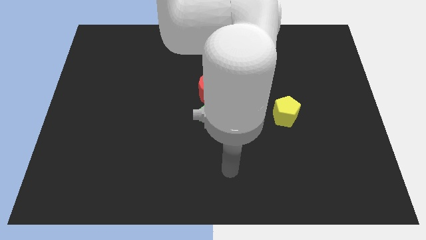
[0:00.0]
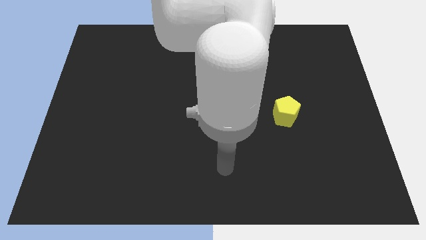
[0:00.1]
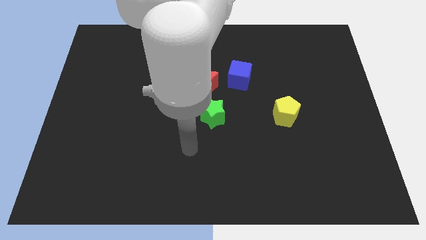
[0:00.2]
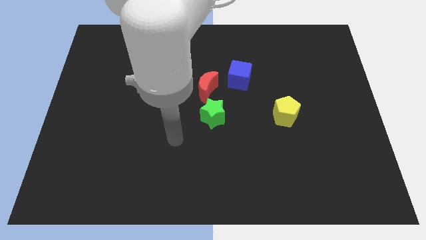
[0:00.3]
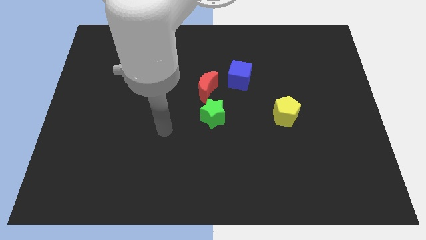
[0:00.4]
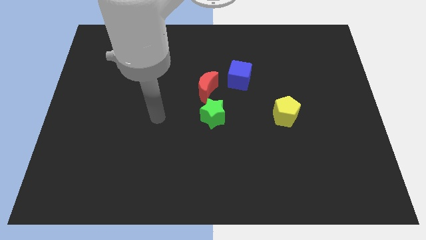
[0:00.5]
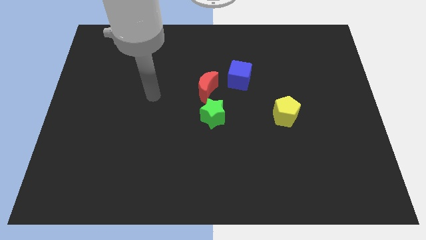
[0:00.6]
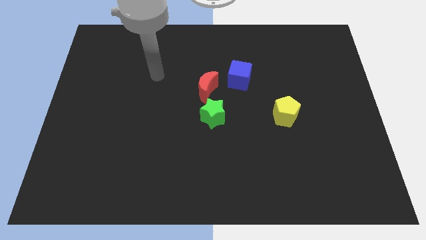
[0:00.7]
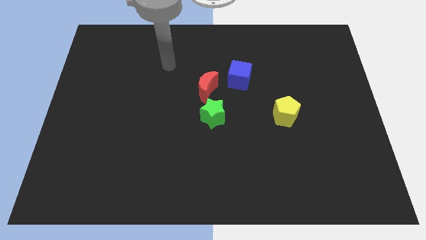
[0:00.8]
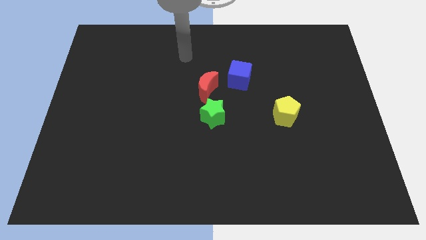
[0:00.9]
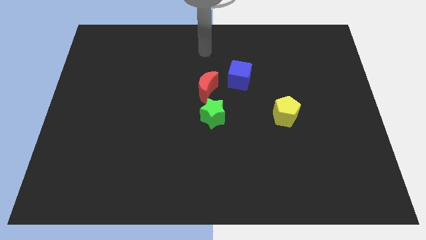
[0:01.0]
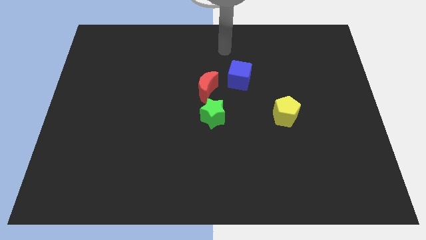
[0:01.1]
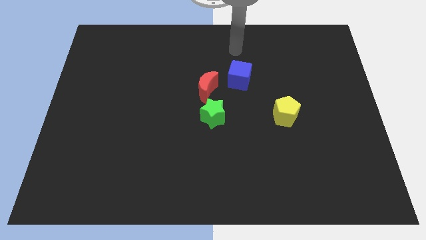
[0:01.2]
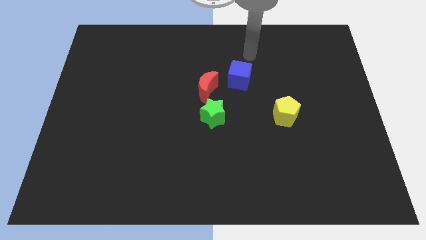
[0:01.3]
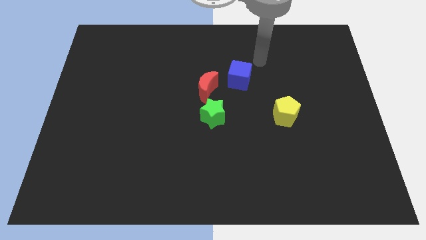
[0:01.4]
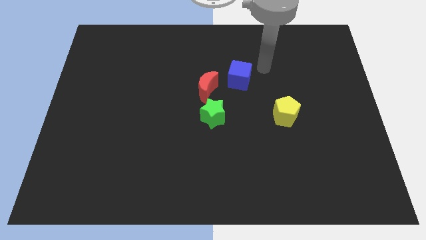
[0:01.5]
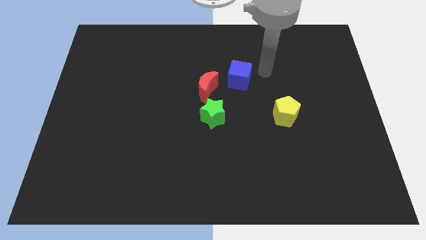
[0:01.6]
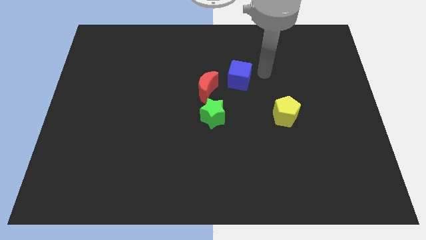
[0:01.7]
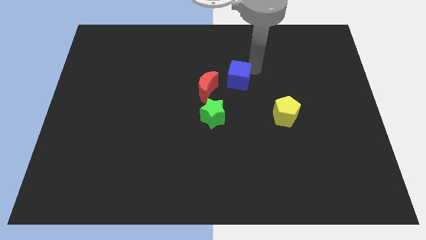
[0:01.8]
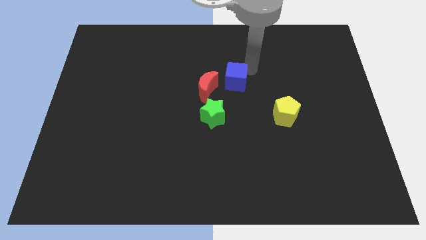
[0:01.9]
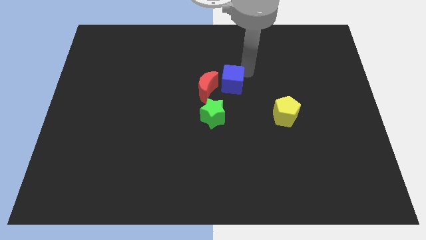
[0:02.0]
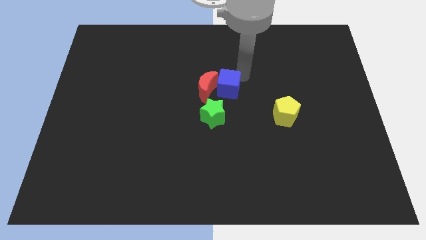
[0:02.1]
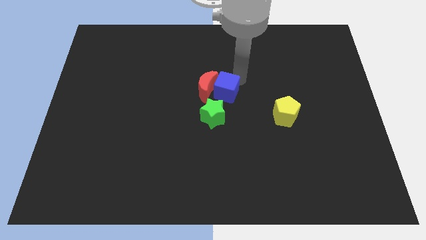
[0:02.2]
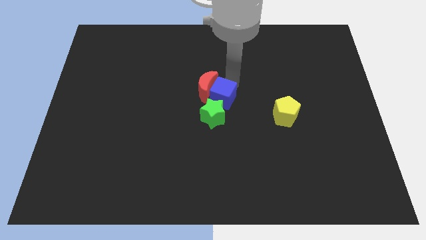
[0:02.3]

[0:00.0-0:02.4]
put the blue cube next to the moon

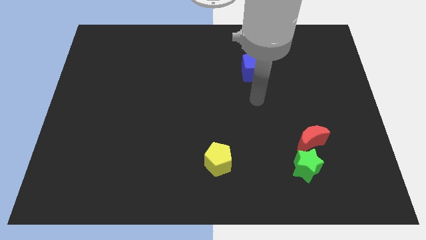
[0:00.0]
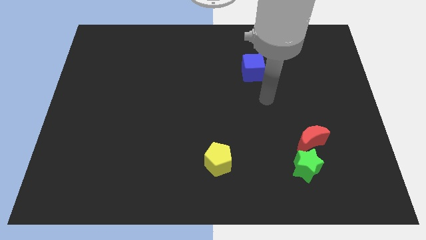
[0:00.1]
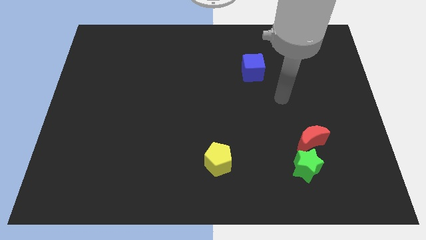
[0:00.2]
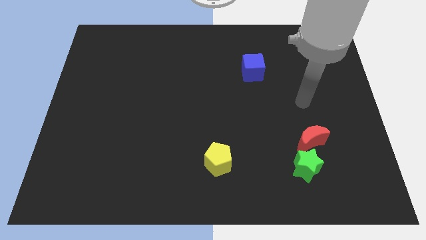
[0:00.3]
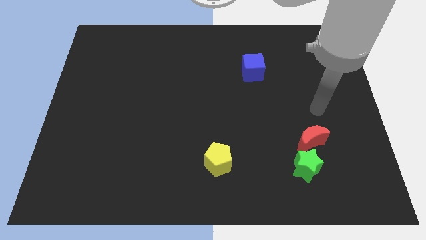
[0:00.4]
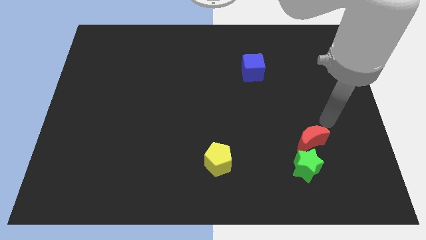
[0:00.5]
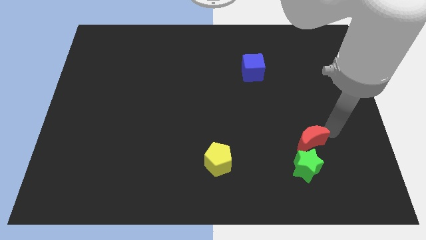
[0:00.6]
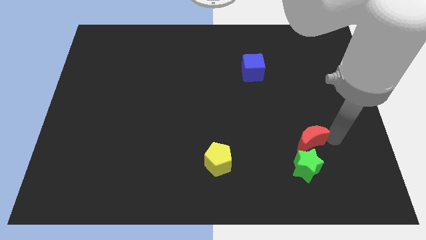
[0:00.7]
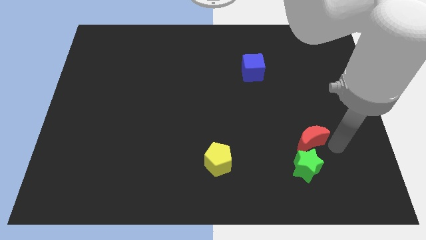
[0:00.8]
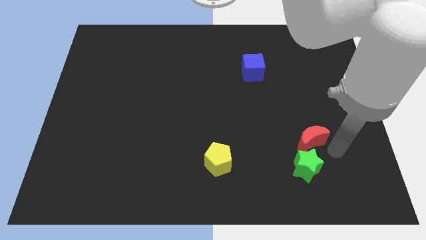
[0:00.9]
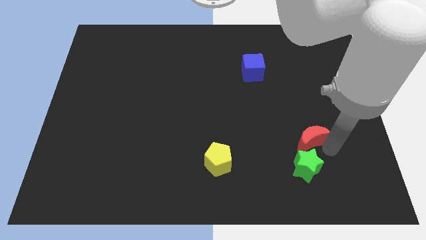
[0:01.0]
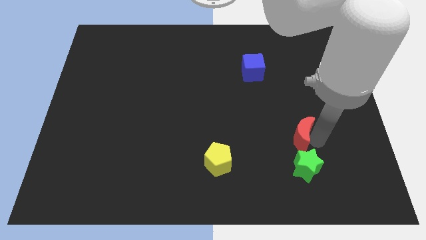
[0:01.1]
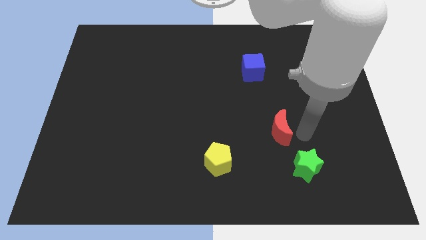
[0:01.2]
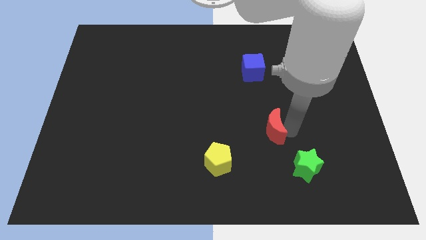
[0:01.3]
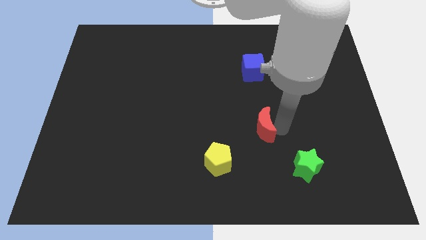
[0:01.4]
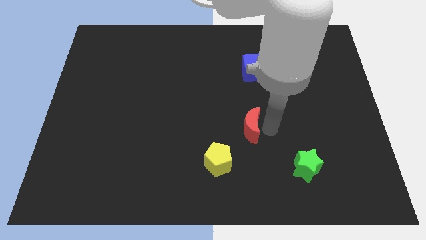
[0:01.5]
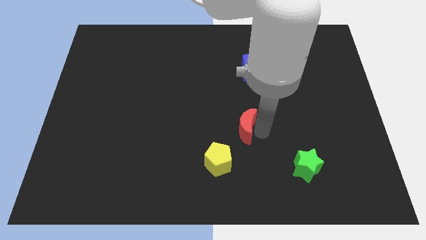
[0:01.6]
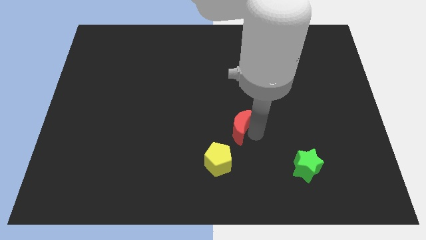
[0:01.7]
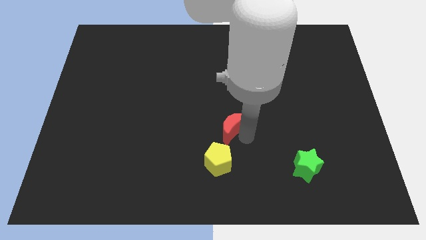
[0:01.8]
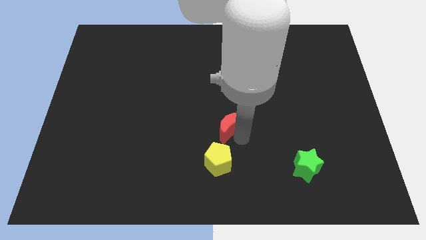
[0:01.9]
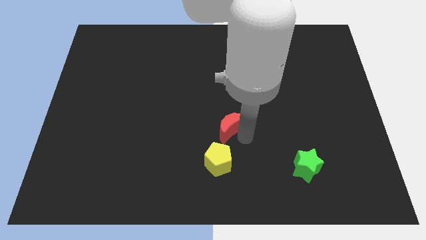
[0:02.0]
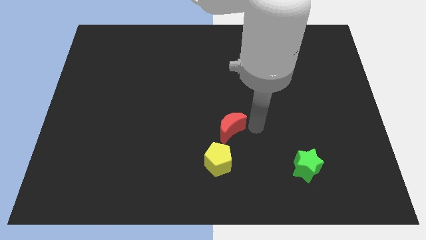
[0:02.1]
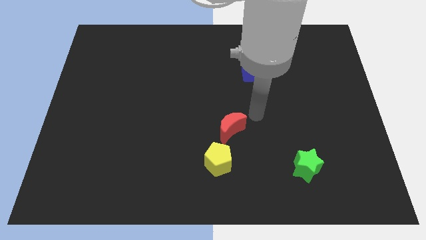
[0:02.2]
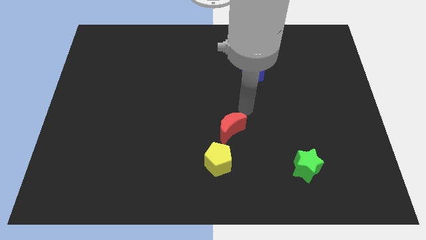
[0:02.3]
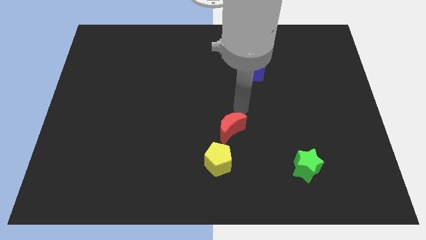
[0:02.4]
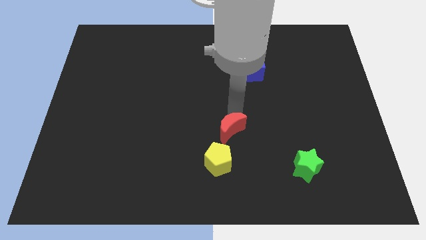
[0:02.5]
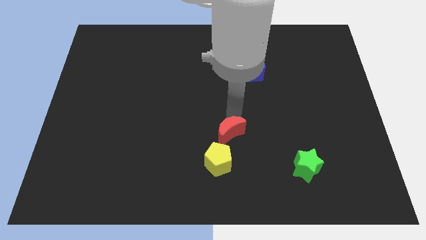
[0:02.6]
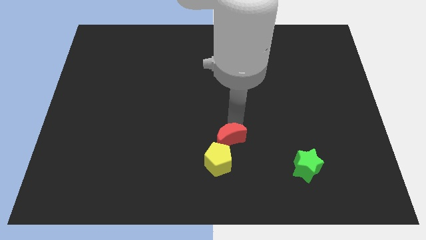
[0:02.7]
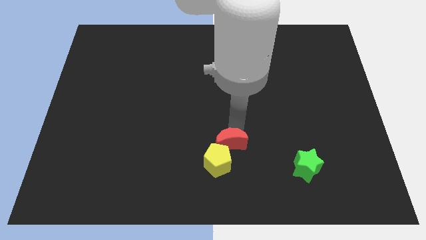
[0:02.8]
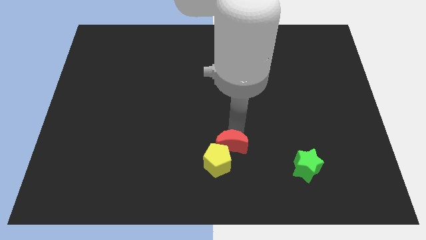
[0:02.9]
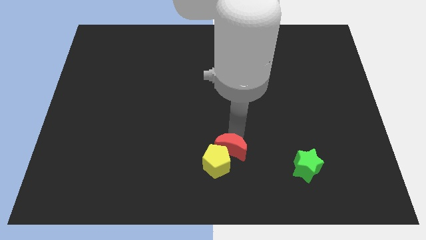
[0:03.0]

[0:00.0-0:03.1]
slide the red block next to the yellow block

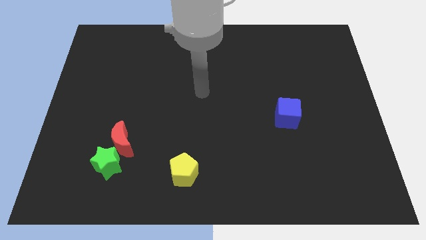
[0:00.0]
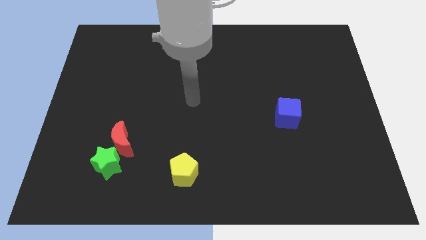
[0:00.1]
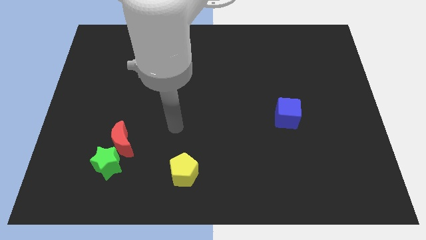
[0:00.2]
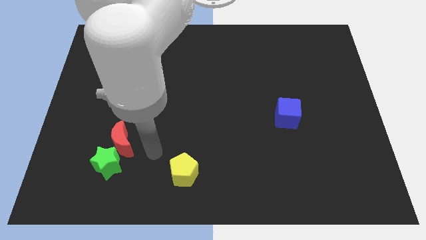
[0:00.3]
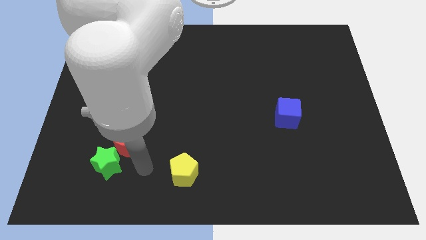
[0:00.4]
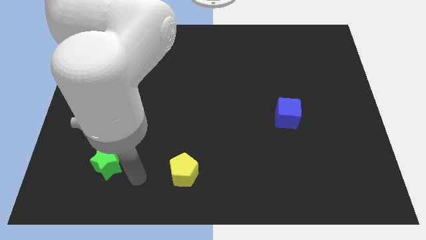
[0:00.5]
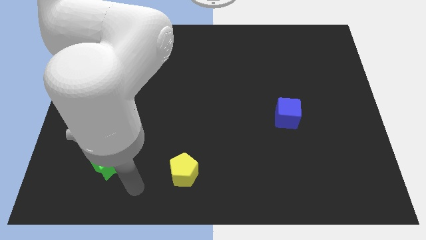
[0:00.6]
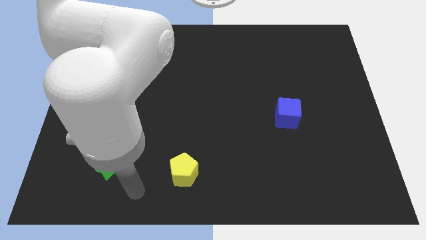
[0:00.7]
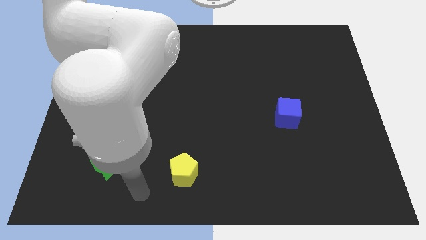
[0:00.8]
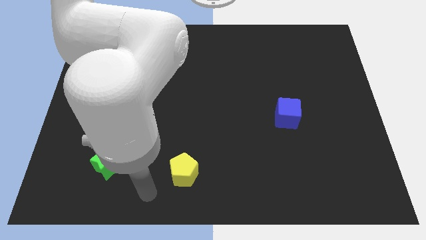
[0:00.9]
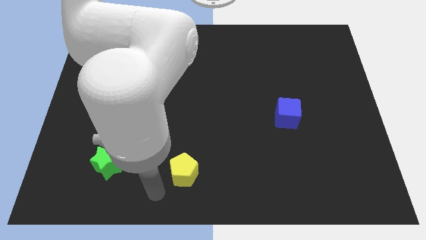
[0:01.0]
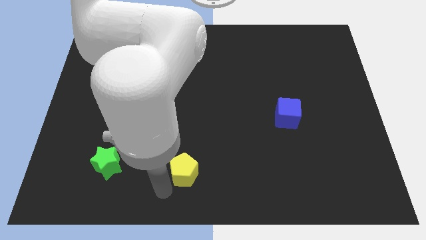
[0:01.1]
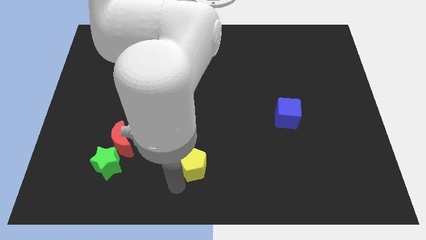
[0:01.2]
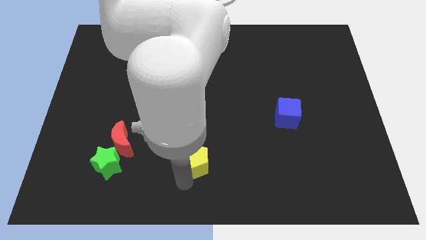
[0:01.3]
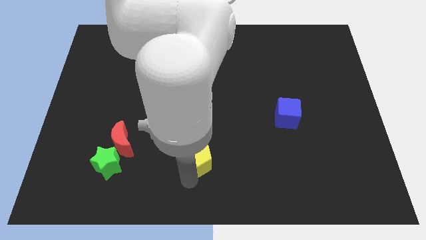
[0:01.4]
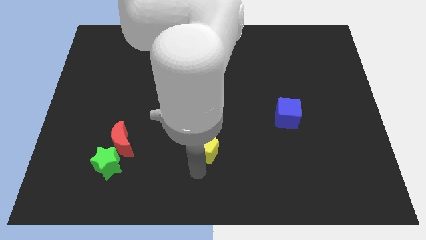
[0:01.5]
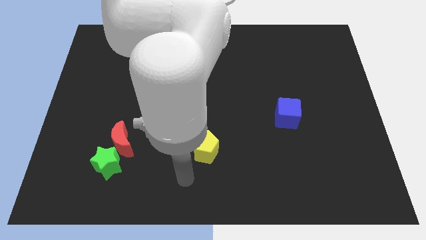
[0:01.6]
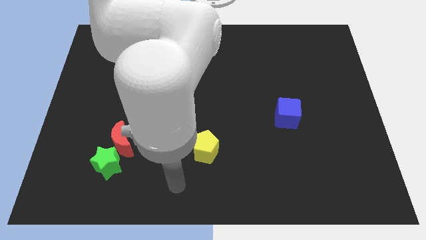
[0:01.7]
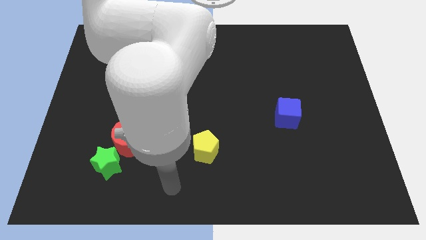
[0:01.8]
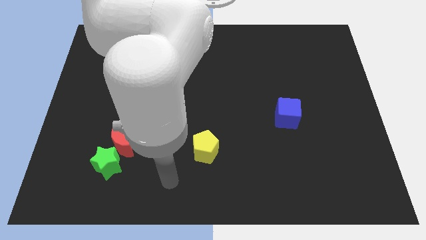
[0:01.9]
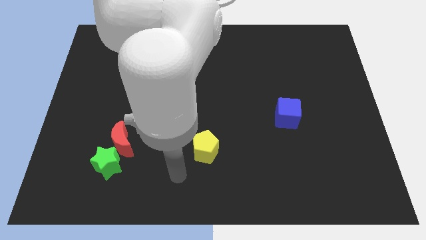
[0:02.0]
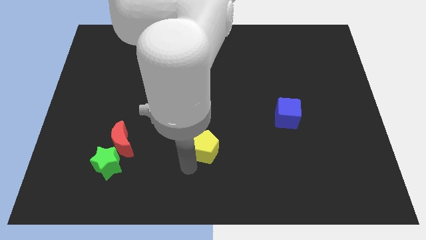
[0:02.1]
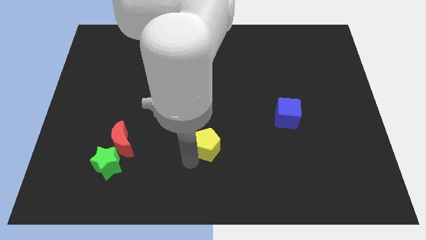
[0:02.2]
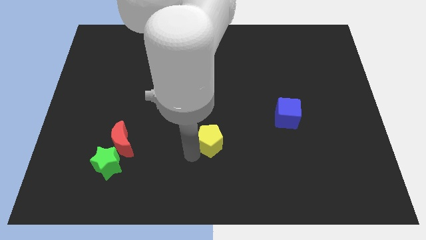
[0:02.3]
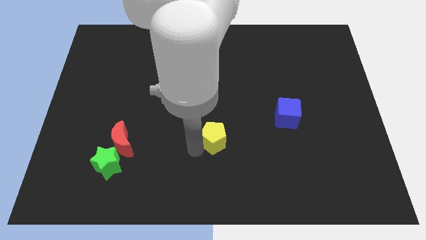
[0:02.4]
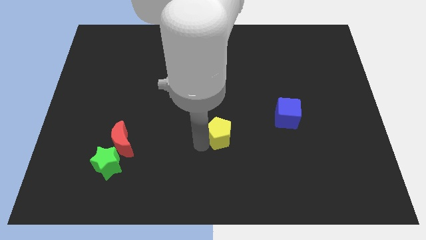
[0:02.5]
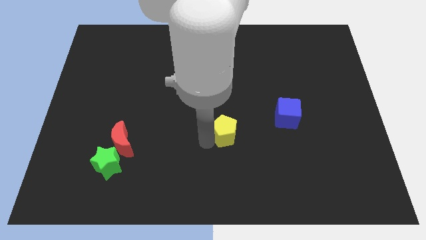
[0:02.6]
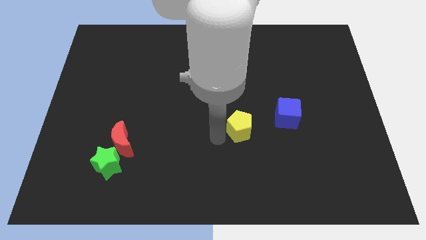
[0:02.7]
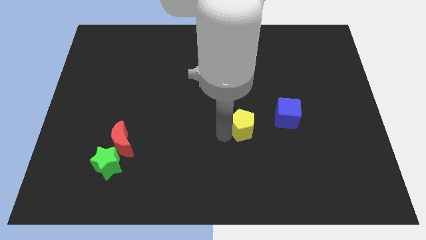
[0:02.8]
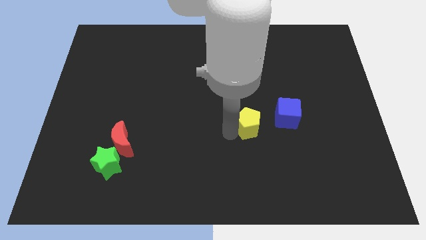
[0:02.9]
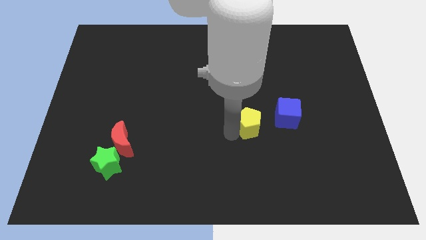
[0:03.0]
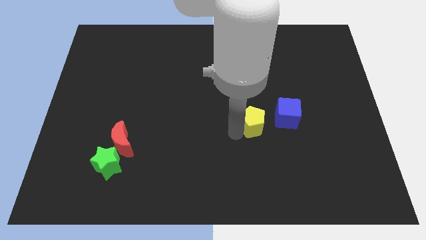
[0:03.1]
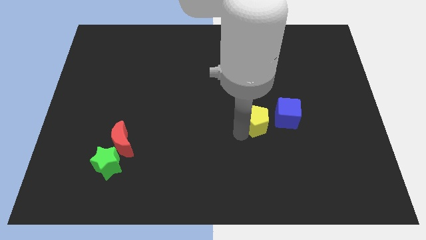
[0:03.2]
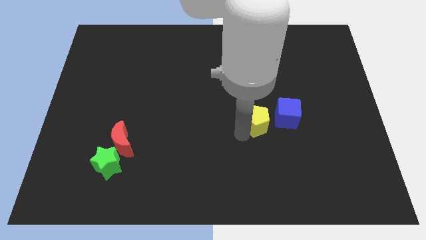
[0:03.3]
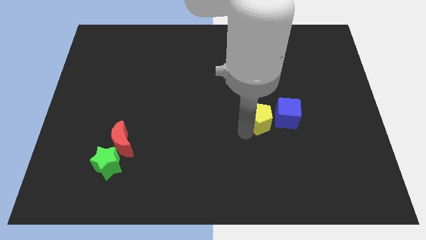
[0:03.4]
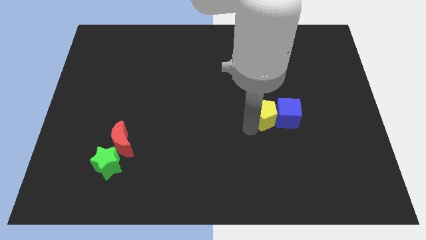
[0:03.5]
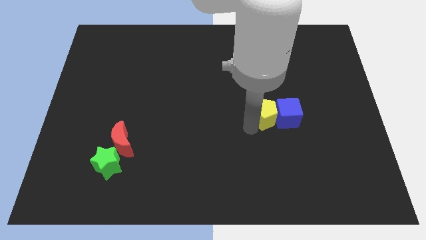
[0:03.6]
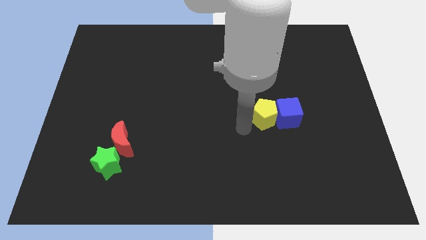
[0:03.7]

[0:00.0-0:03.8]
move the yellow block towards the cube
